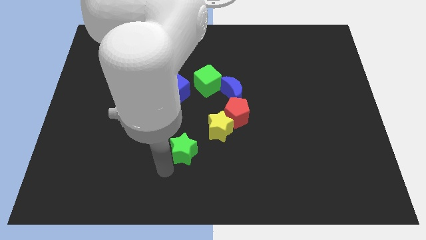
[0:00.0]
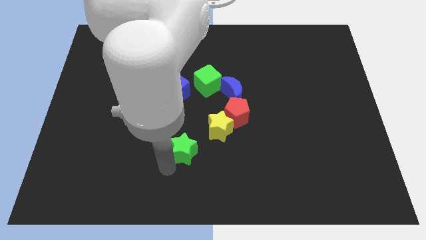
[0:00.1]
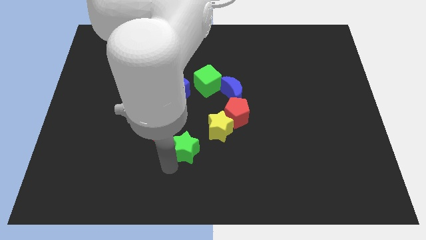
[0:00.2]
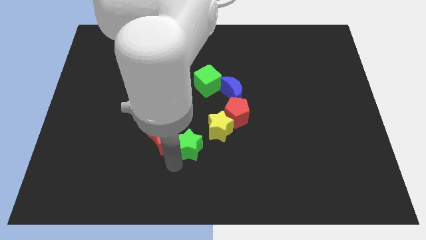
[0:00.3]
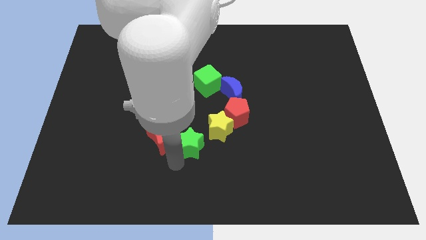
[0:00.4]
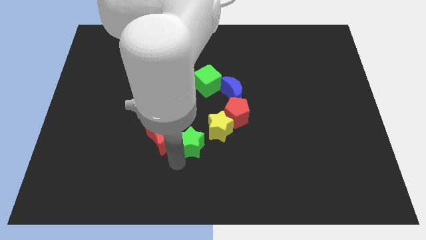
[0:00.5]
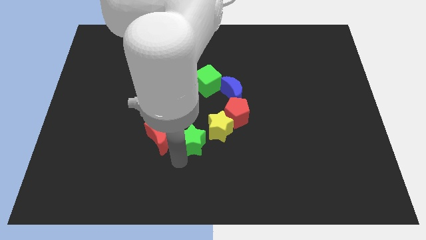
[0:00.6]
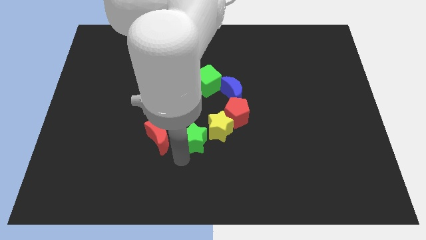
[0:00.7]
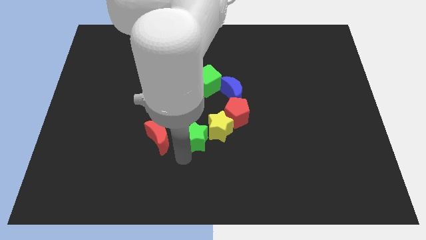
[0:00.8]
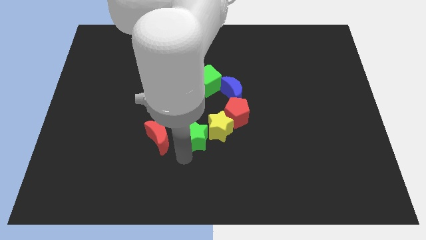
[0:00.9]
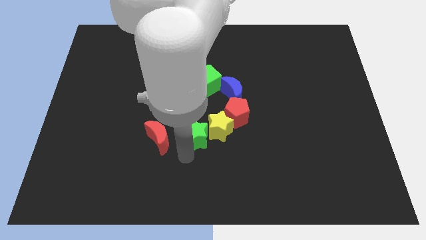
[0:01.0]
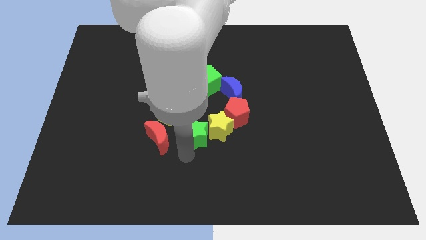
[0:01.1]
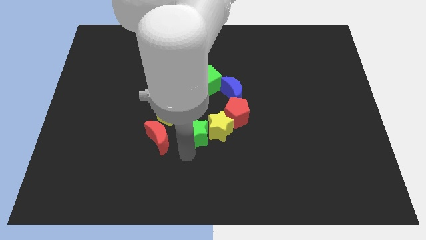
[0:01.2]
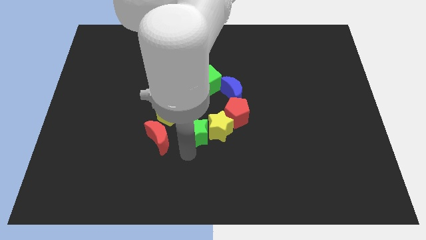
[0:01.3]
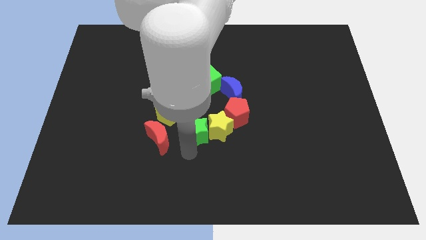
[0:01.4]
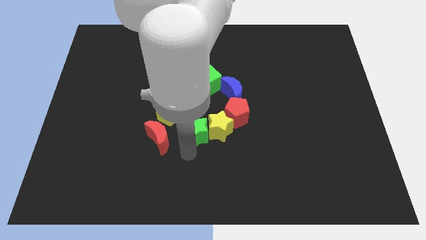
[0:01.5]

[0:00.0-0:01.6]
move the green star into the left side of the yellow star

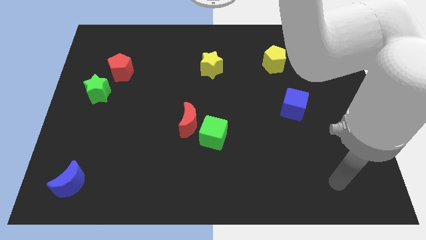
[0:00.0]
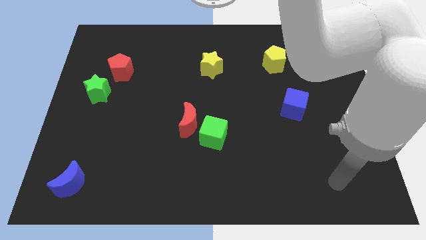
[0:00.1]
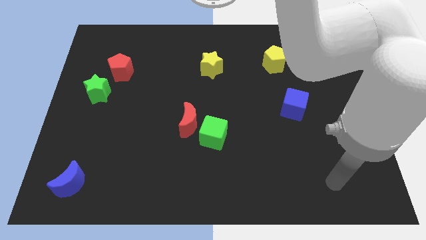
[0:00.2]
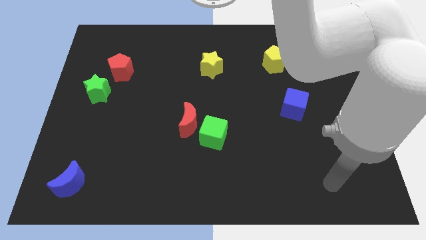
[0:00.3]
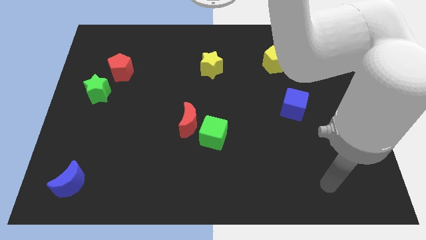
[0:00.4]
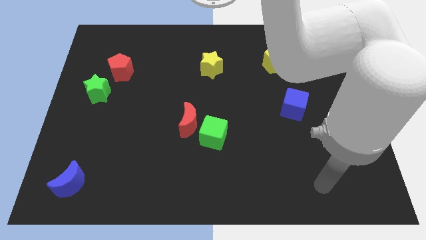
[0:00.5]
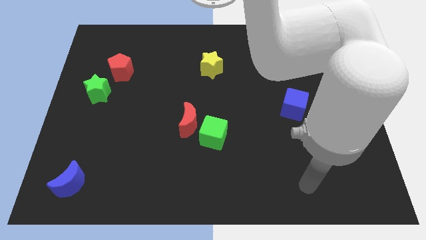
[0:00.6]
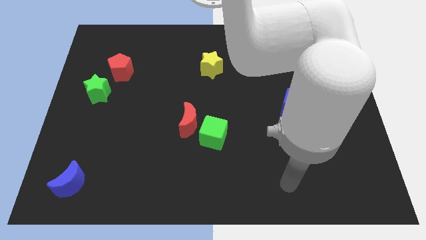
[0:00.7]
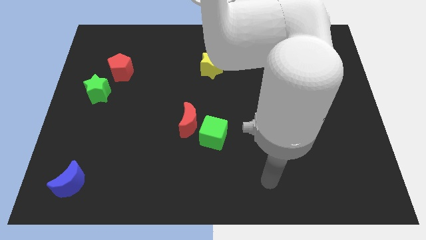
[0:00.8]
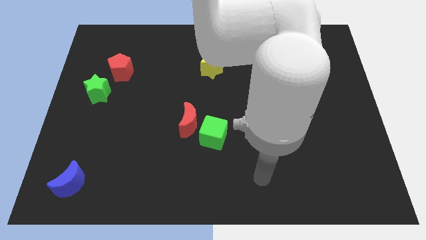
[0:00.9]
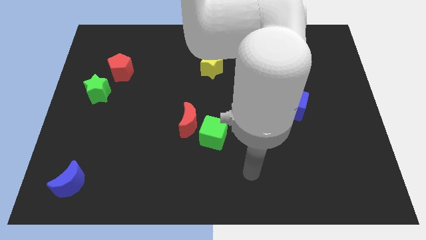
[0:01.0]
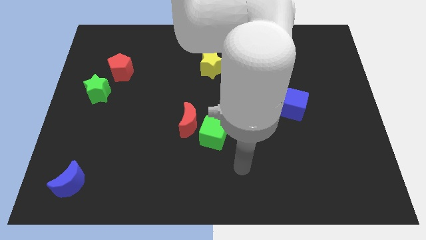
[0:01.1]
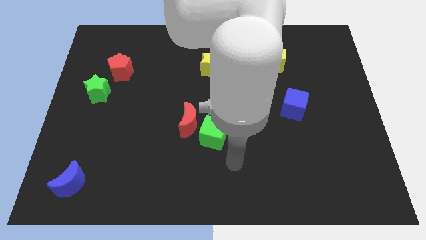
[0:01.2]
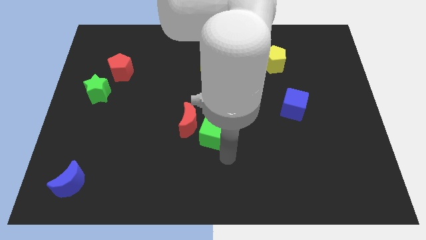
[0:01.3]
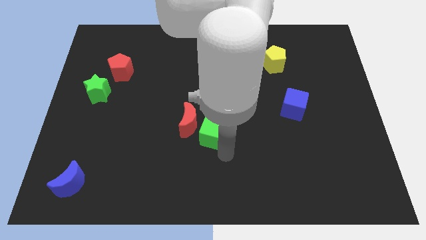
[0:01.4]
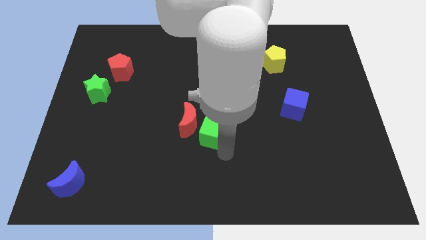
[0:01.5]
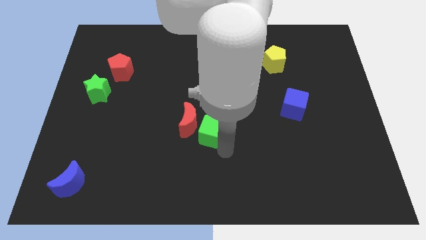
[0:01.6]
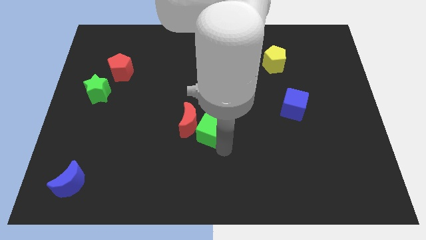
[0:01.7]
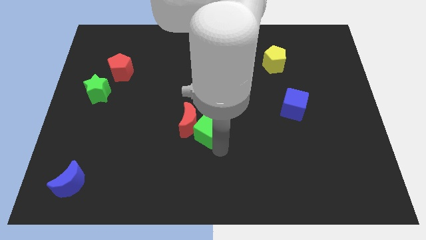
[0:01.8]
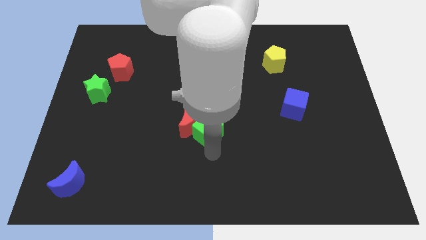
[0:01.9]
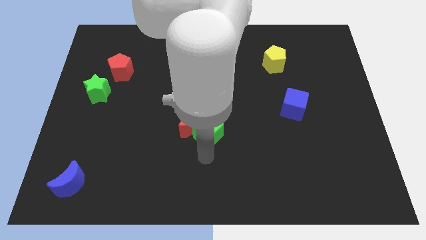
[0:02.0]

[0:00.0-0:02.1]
place the arm at the bottom of the green cube

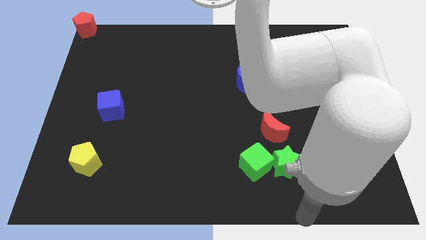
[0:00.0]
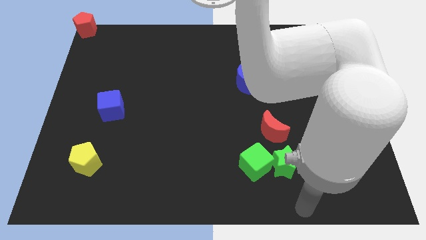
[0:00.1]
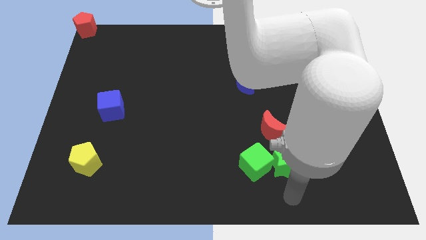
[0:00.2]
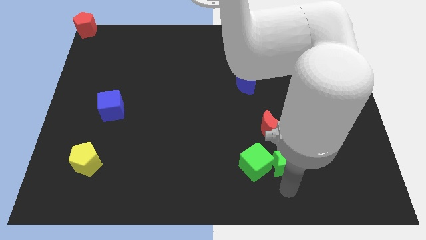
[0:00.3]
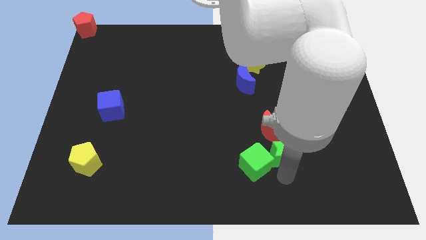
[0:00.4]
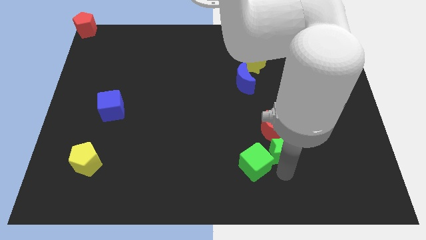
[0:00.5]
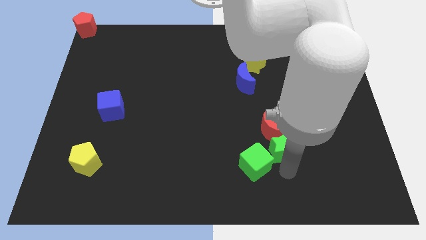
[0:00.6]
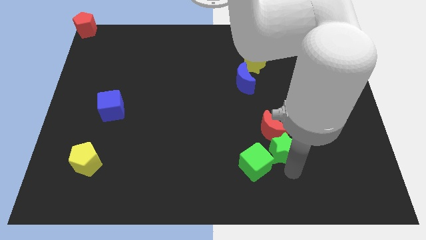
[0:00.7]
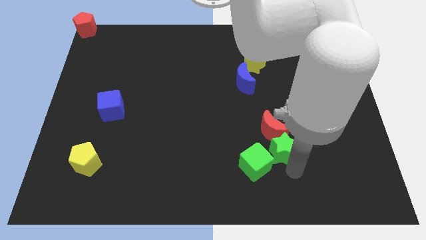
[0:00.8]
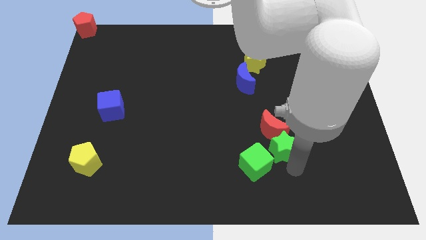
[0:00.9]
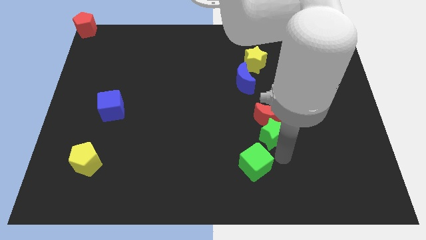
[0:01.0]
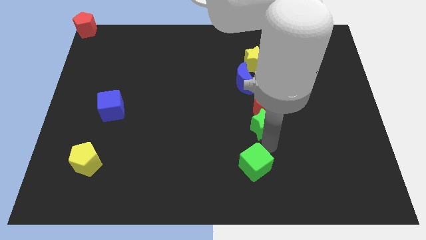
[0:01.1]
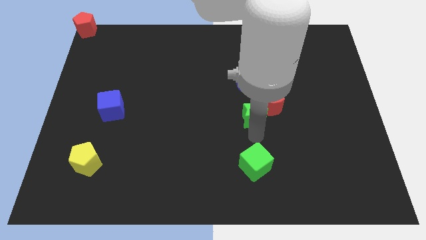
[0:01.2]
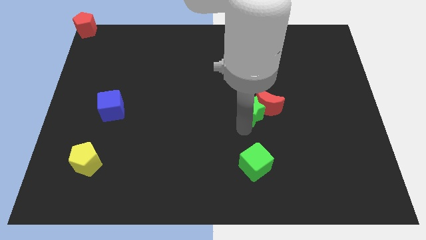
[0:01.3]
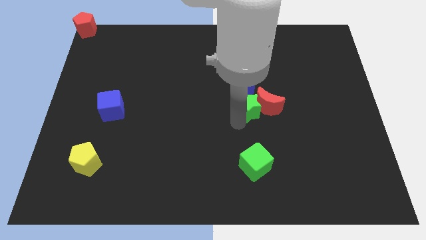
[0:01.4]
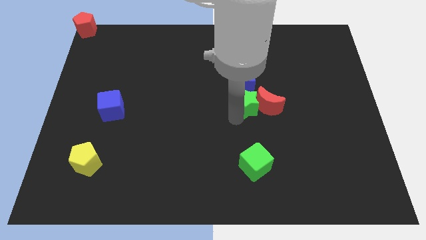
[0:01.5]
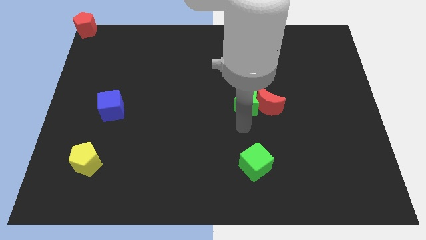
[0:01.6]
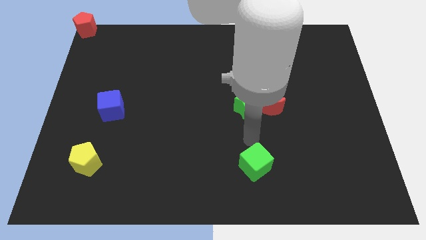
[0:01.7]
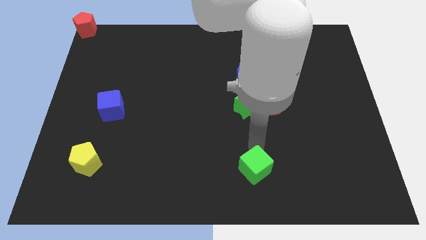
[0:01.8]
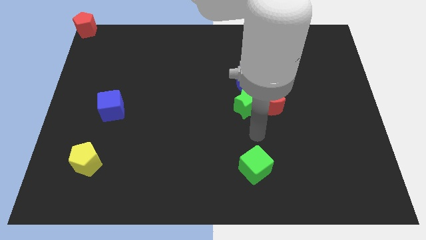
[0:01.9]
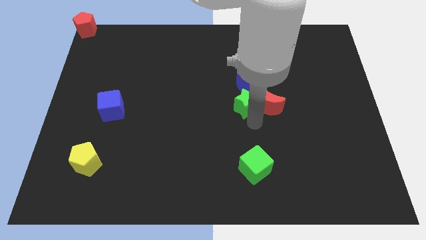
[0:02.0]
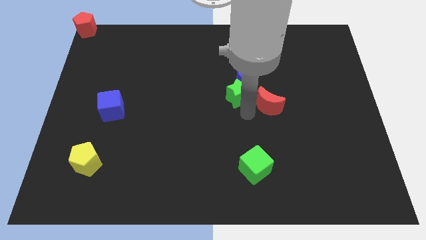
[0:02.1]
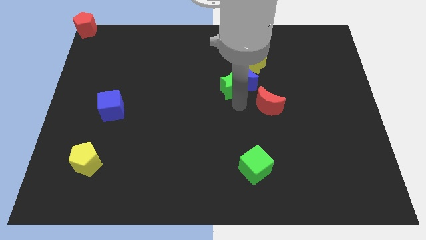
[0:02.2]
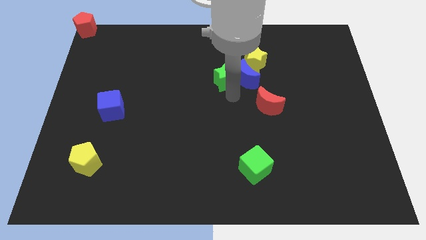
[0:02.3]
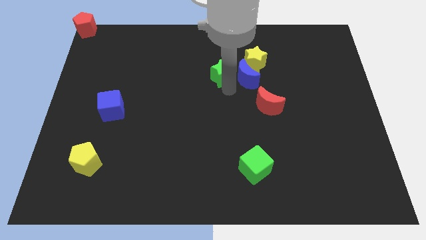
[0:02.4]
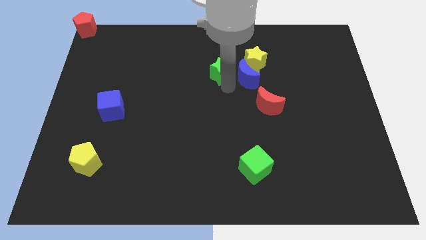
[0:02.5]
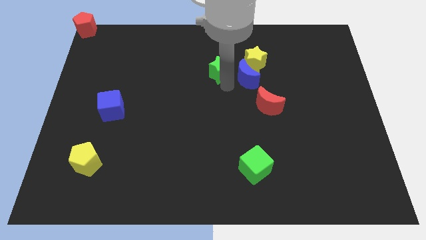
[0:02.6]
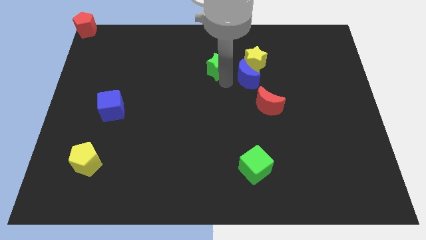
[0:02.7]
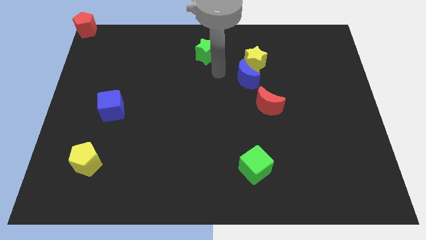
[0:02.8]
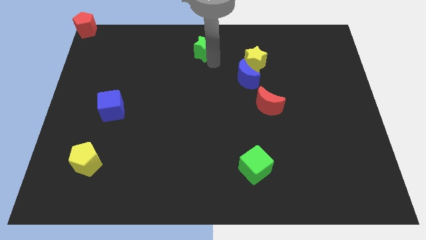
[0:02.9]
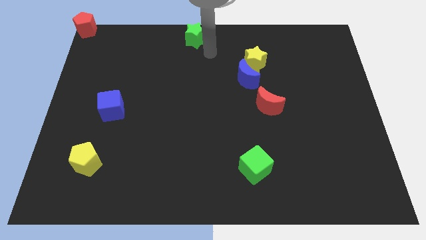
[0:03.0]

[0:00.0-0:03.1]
push the green star and red moon towards the top side of the board

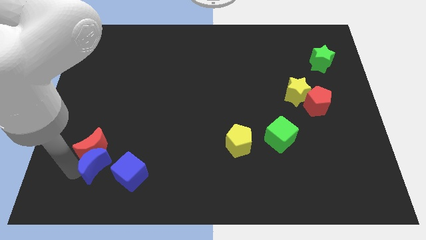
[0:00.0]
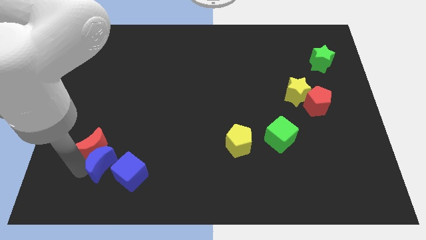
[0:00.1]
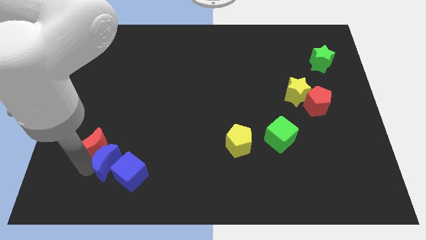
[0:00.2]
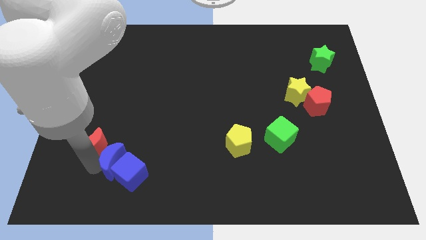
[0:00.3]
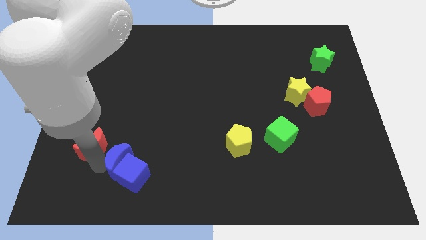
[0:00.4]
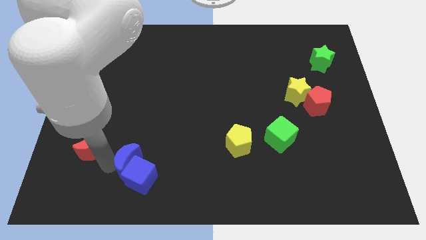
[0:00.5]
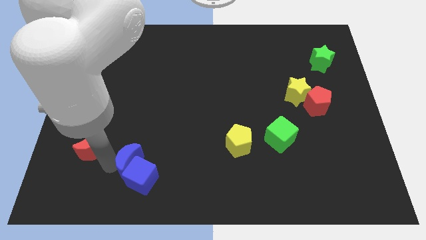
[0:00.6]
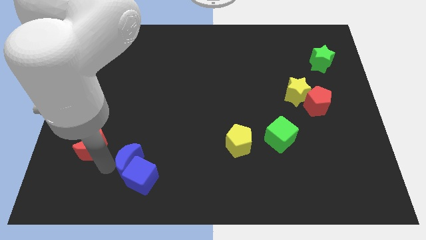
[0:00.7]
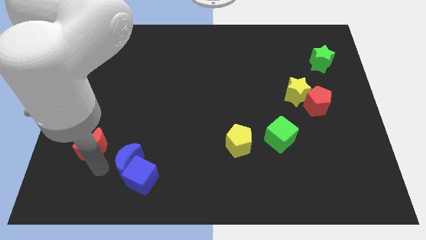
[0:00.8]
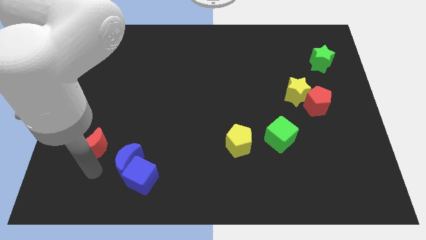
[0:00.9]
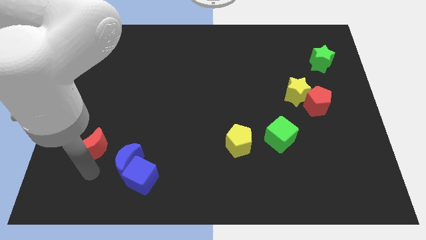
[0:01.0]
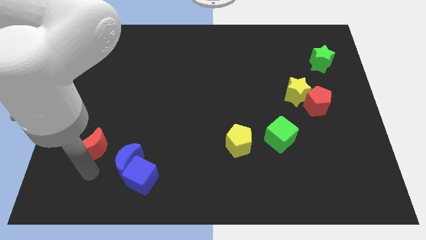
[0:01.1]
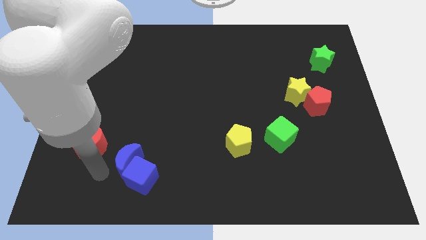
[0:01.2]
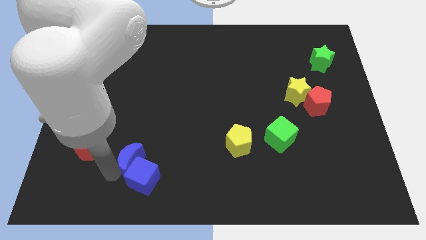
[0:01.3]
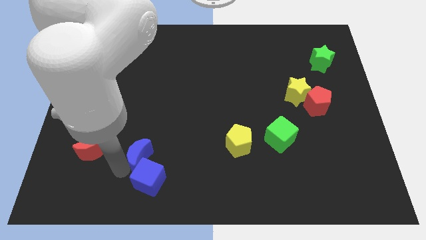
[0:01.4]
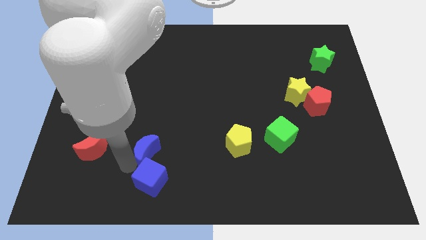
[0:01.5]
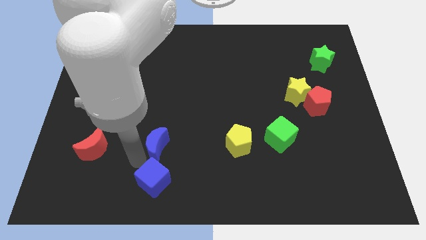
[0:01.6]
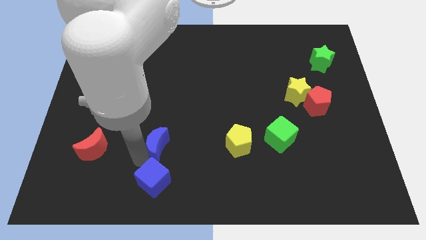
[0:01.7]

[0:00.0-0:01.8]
move the blue crescent near the blue cube

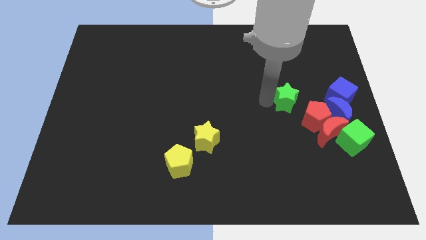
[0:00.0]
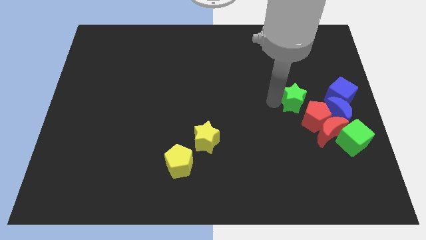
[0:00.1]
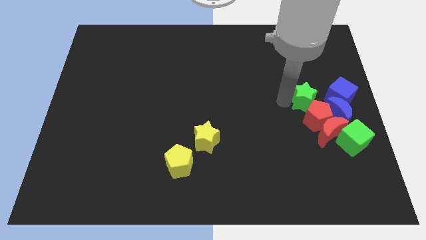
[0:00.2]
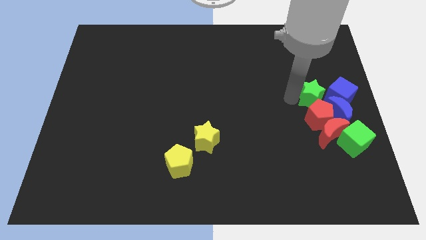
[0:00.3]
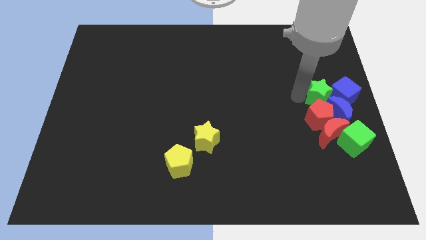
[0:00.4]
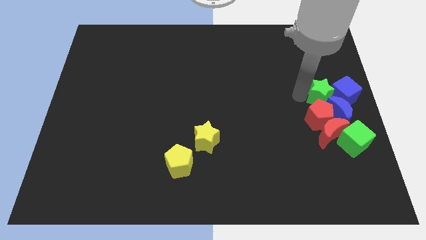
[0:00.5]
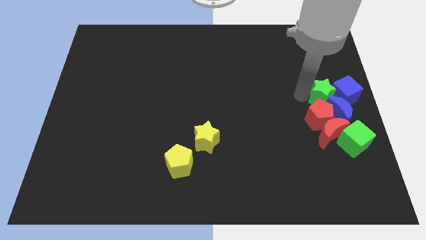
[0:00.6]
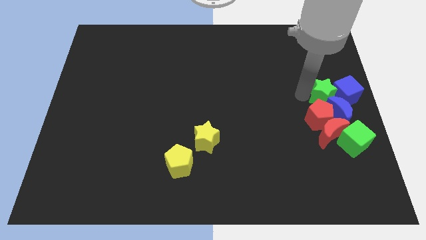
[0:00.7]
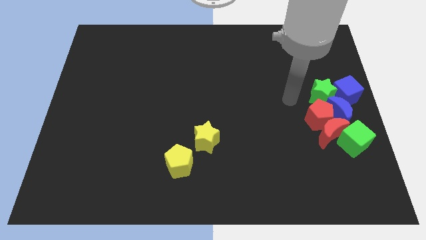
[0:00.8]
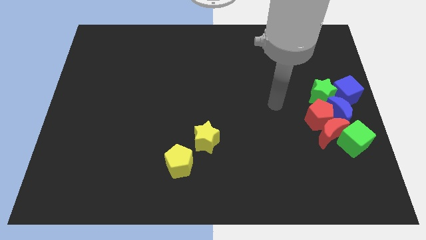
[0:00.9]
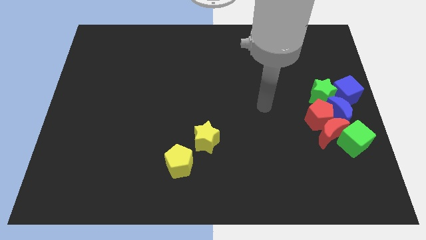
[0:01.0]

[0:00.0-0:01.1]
push the green star into the blue blocks
